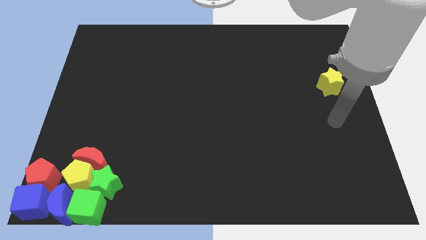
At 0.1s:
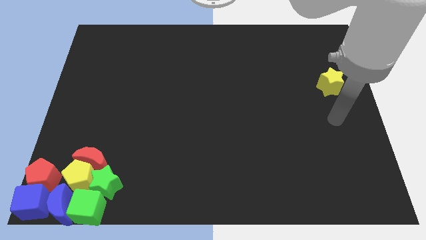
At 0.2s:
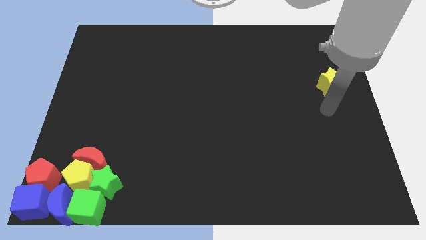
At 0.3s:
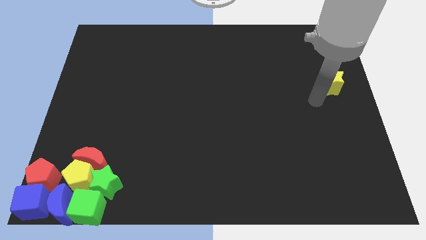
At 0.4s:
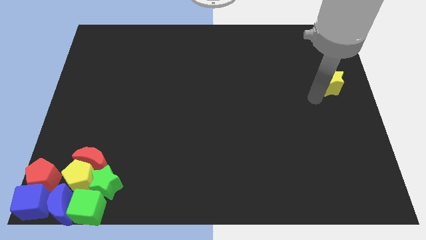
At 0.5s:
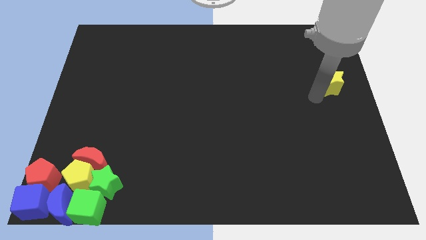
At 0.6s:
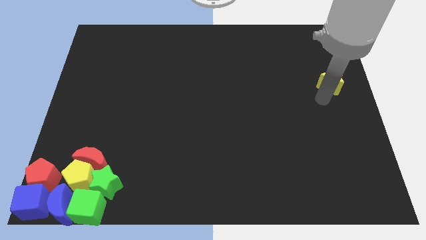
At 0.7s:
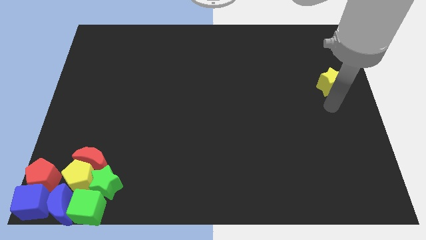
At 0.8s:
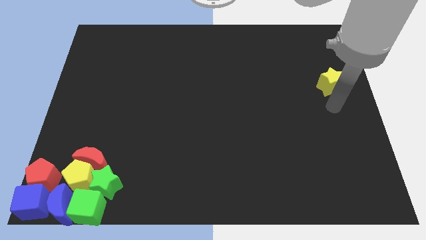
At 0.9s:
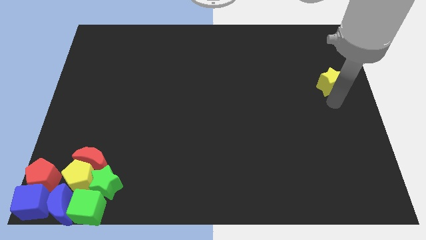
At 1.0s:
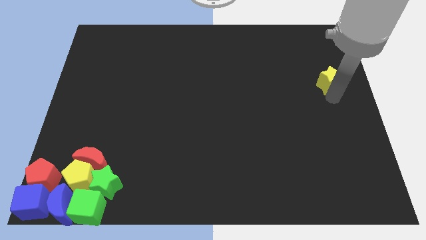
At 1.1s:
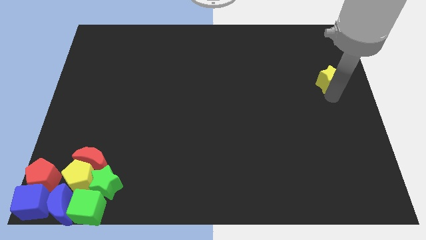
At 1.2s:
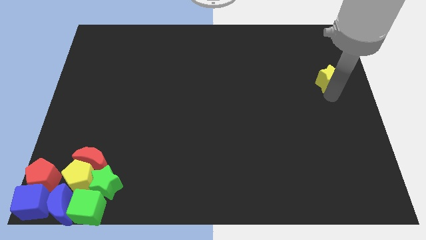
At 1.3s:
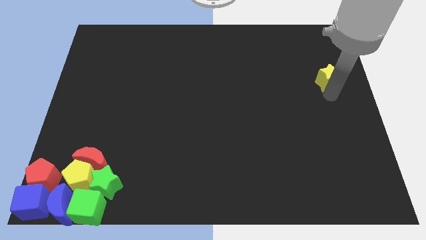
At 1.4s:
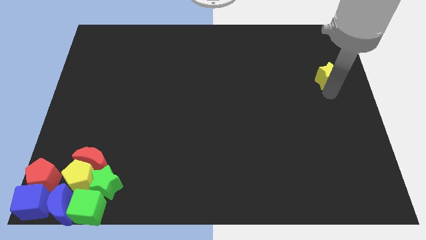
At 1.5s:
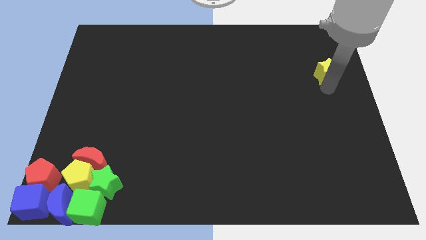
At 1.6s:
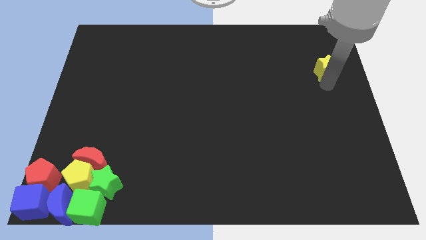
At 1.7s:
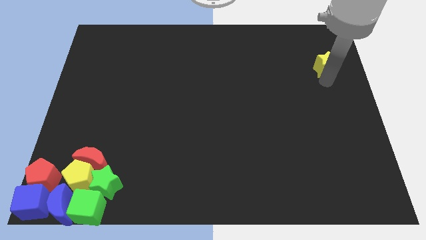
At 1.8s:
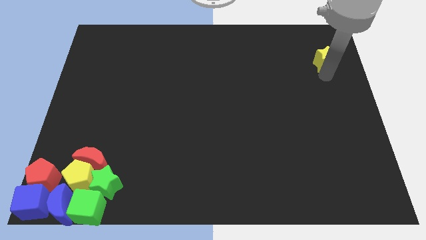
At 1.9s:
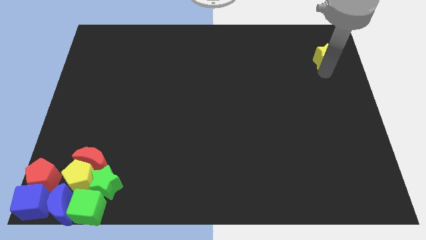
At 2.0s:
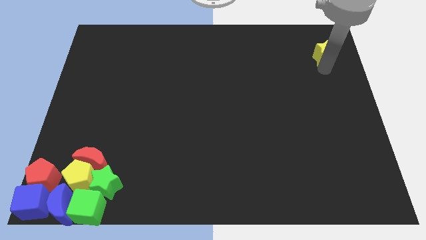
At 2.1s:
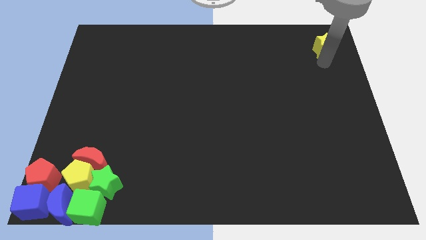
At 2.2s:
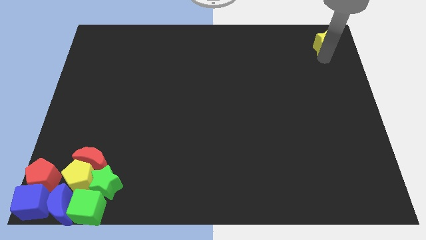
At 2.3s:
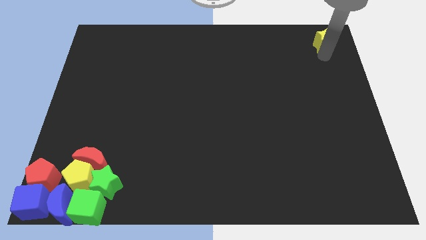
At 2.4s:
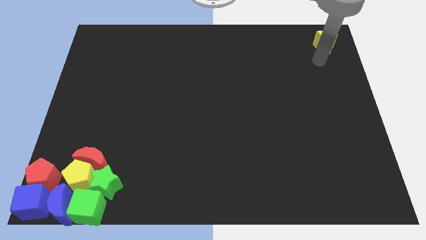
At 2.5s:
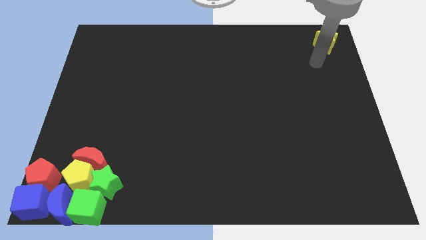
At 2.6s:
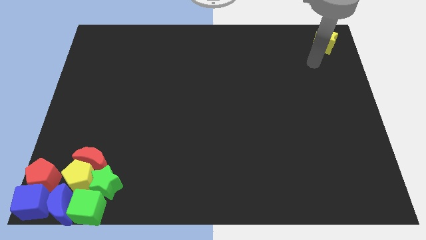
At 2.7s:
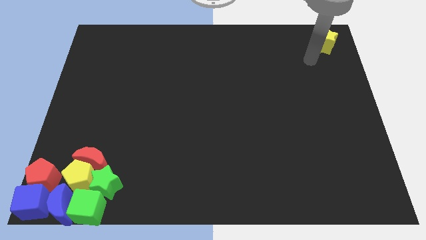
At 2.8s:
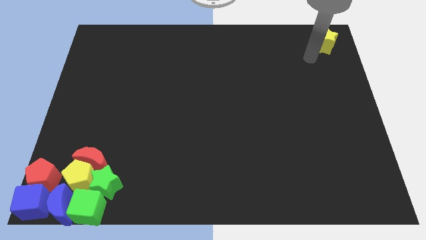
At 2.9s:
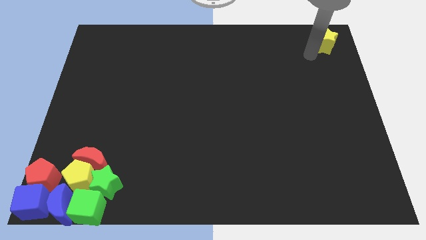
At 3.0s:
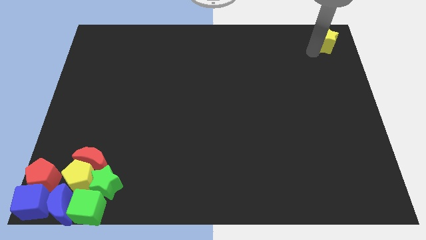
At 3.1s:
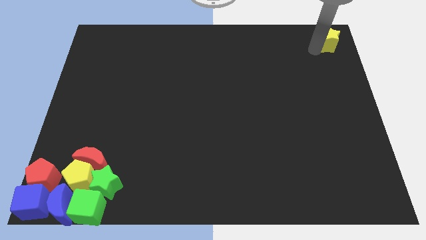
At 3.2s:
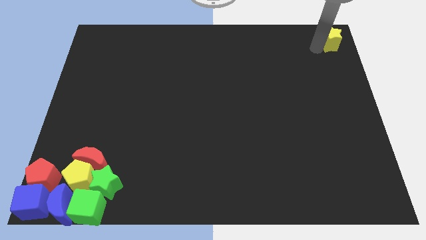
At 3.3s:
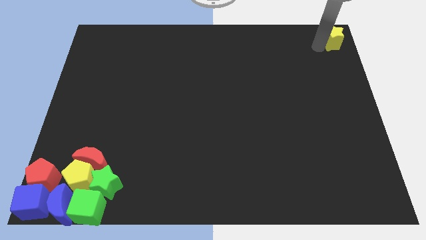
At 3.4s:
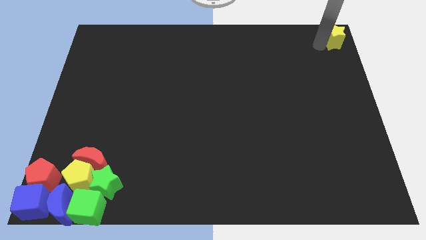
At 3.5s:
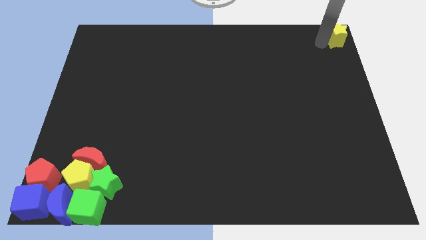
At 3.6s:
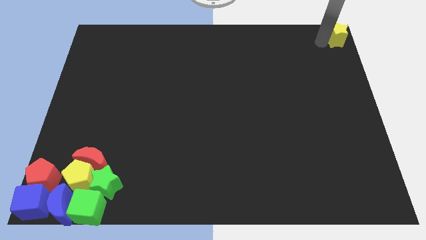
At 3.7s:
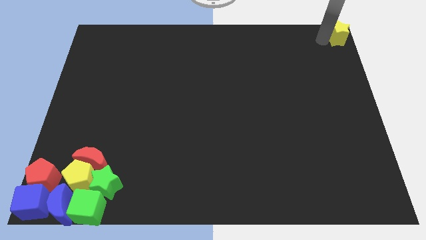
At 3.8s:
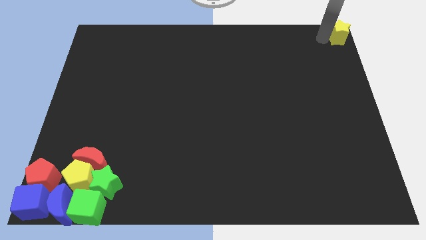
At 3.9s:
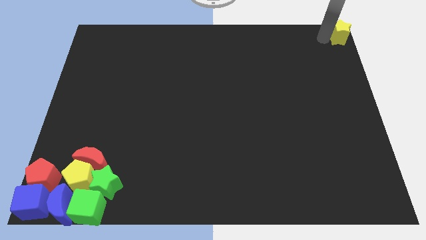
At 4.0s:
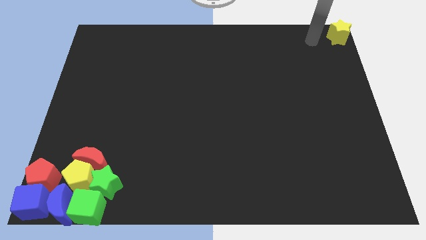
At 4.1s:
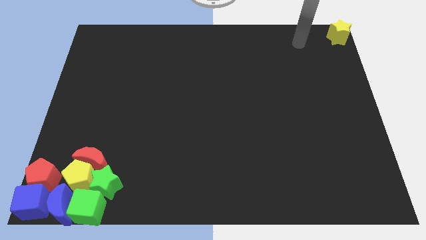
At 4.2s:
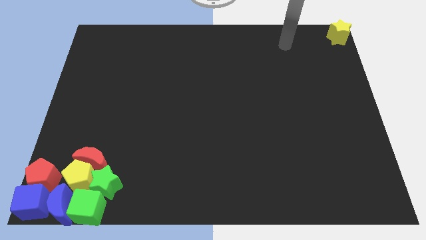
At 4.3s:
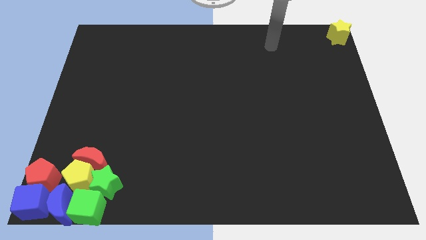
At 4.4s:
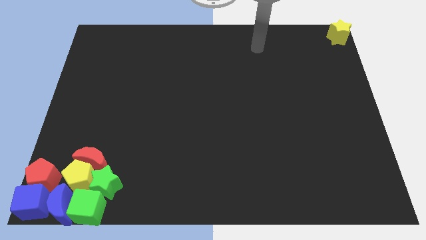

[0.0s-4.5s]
push the yellow star to the top right on the board

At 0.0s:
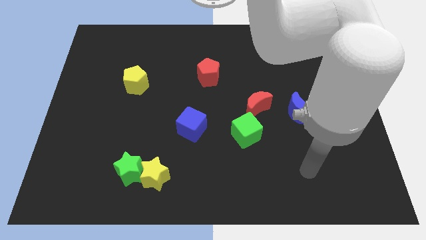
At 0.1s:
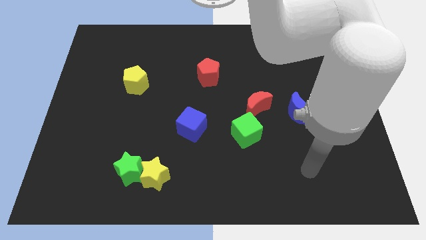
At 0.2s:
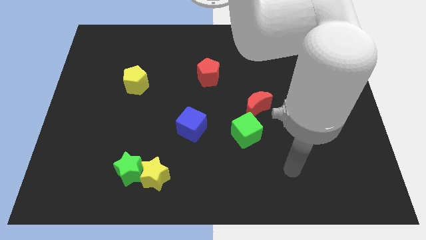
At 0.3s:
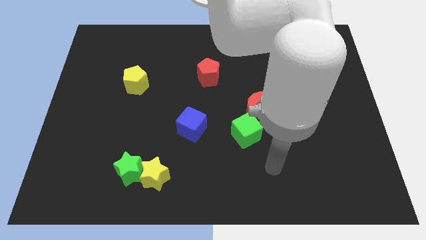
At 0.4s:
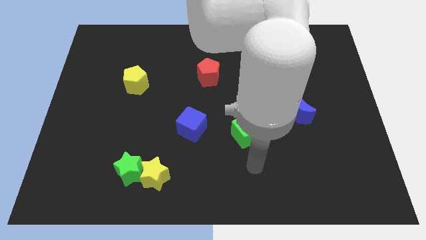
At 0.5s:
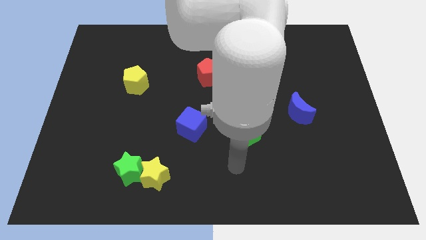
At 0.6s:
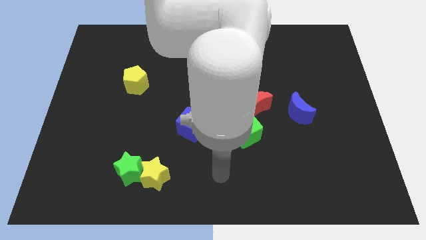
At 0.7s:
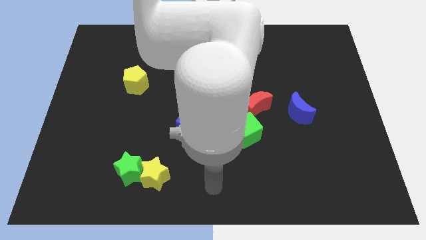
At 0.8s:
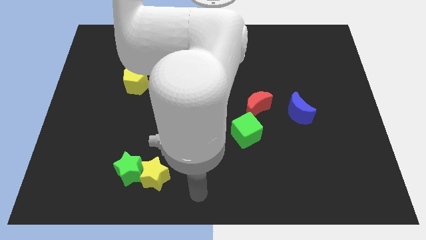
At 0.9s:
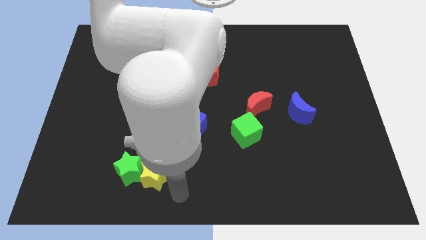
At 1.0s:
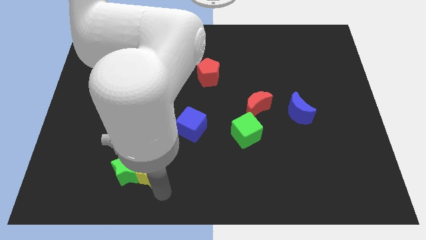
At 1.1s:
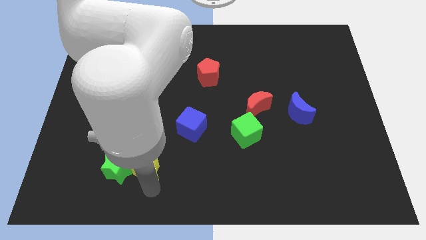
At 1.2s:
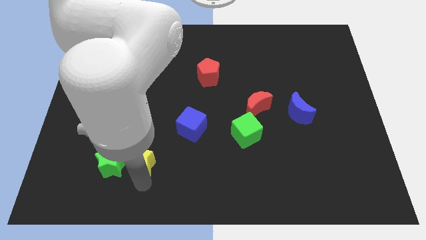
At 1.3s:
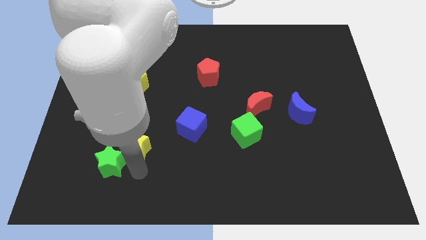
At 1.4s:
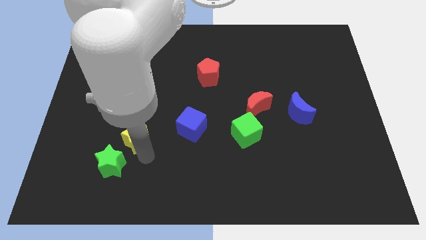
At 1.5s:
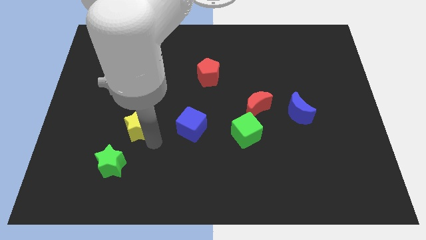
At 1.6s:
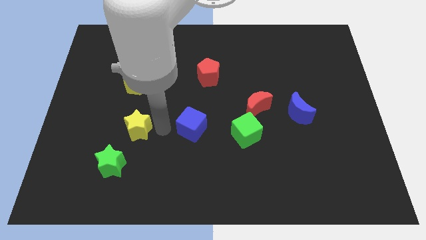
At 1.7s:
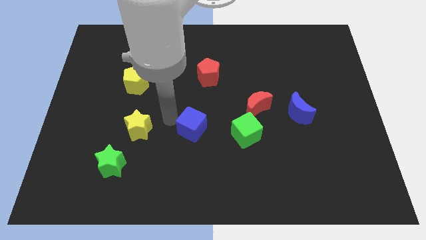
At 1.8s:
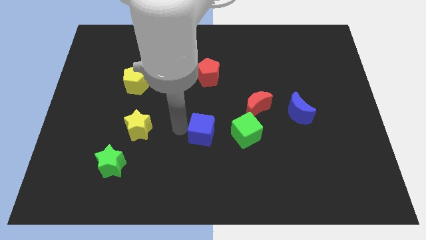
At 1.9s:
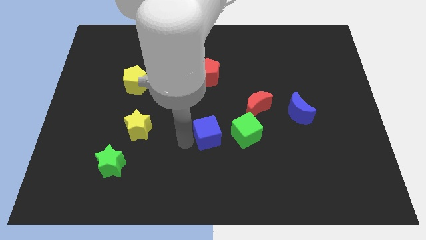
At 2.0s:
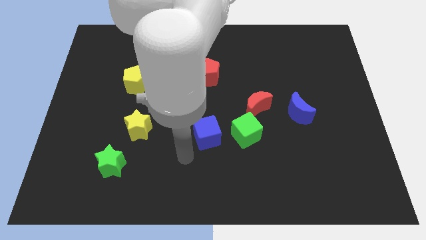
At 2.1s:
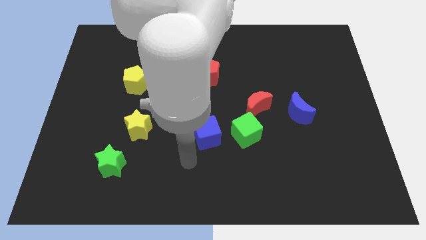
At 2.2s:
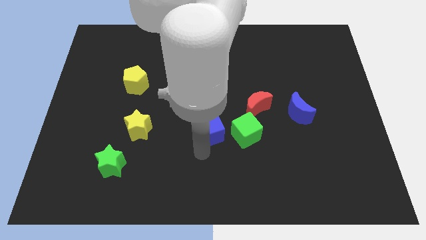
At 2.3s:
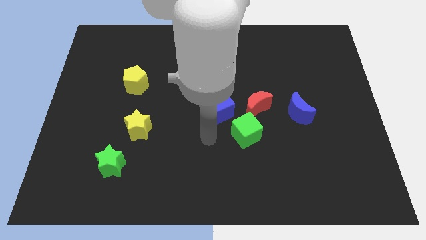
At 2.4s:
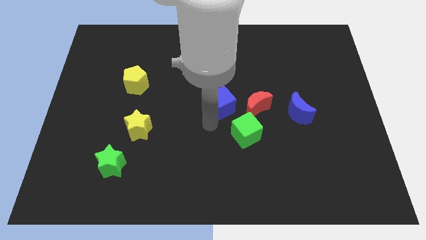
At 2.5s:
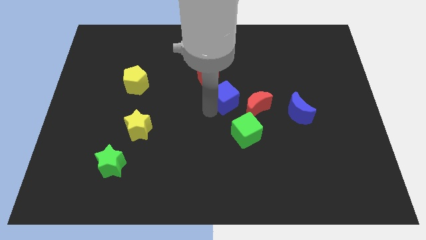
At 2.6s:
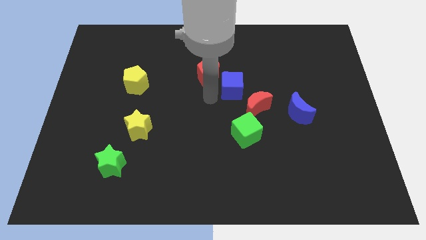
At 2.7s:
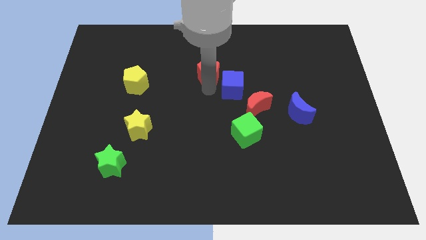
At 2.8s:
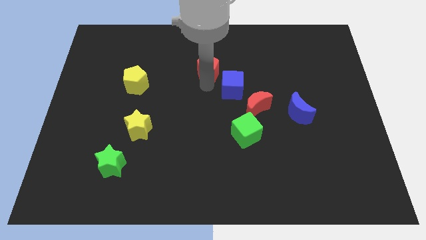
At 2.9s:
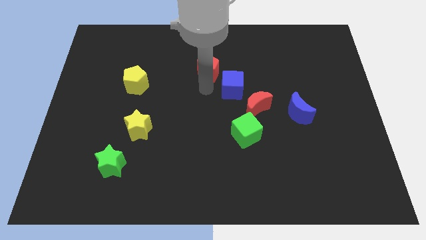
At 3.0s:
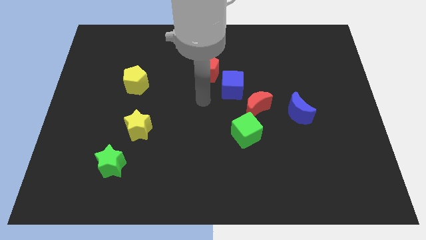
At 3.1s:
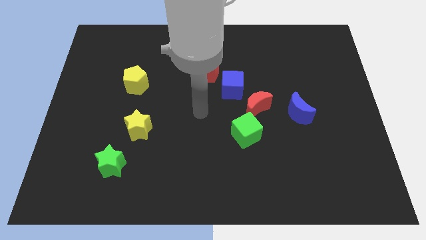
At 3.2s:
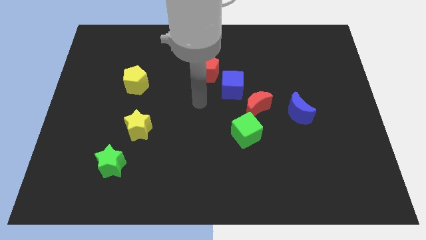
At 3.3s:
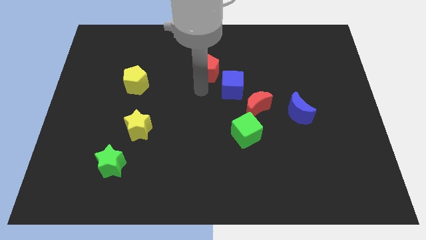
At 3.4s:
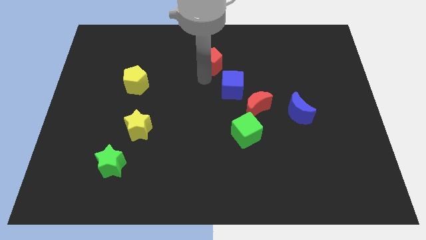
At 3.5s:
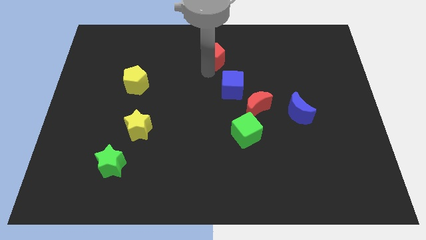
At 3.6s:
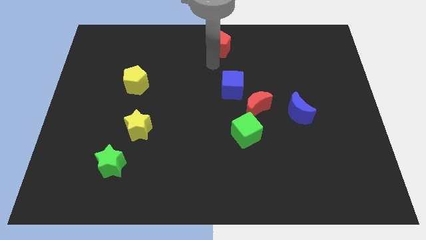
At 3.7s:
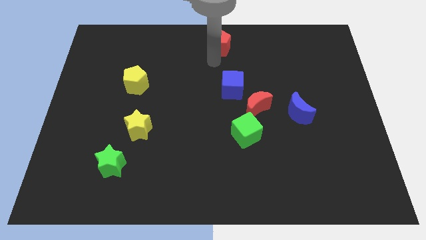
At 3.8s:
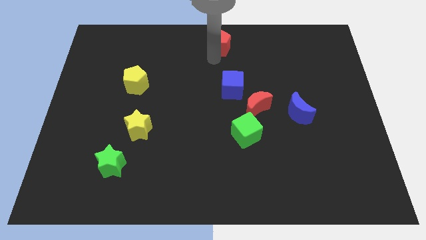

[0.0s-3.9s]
push the yellow star blue cube and red pentagon towards top

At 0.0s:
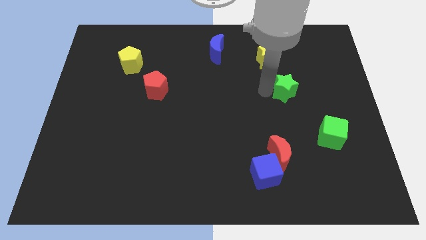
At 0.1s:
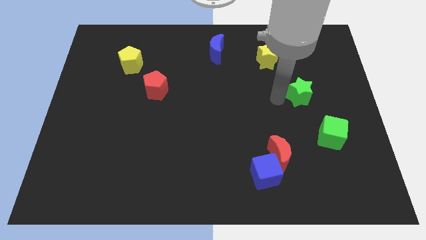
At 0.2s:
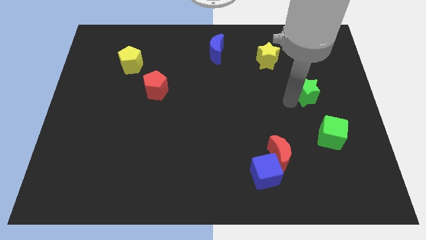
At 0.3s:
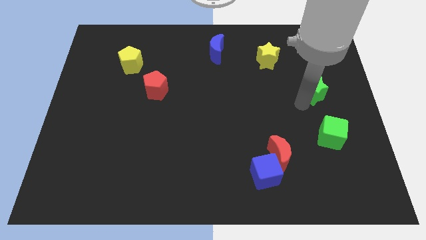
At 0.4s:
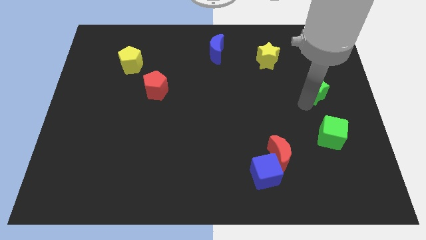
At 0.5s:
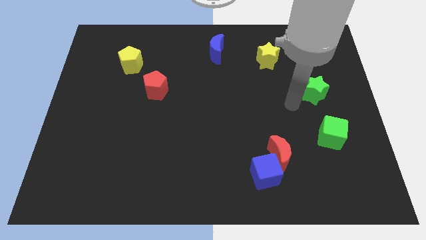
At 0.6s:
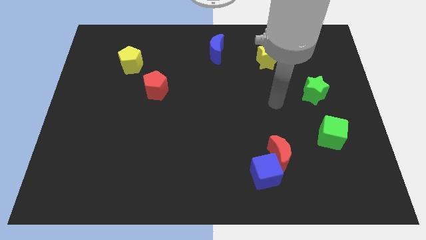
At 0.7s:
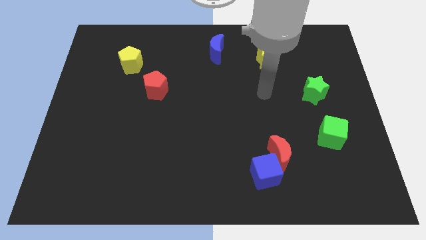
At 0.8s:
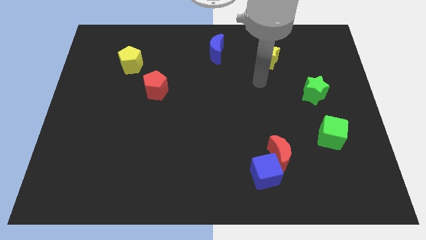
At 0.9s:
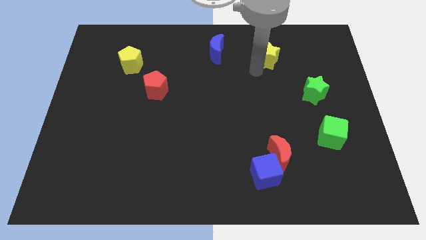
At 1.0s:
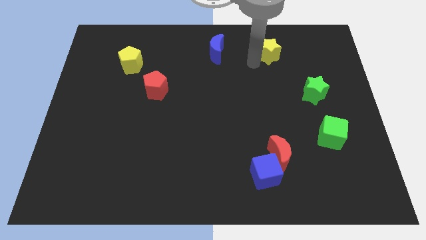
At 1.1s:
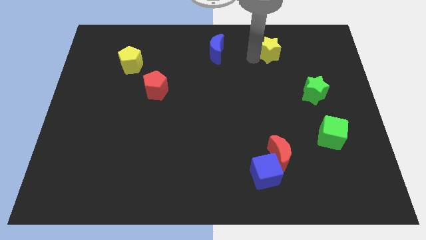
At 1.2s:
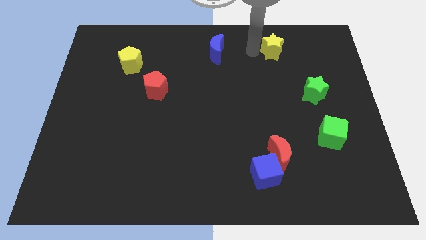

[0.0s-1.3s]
push green star towards right side of the board
